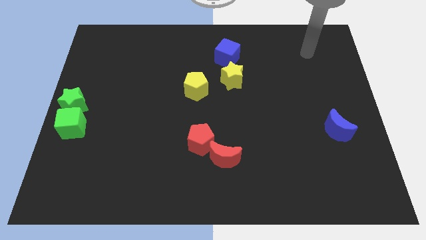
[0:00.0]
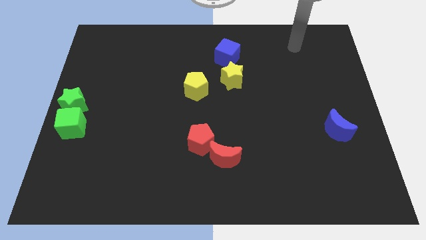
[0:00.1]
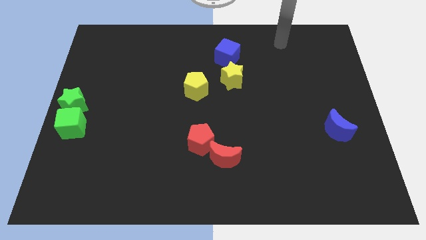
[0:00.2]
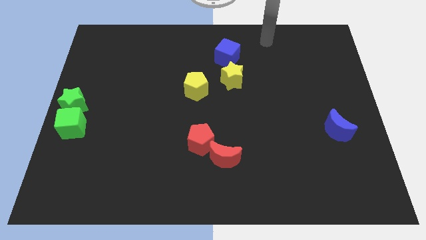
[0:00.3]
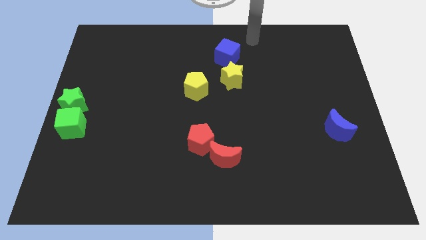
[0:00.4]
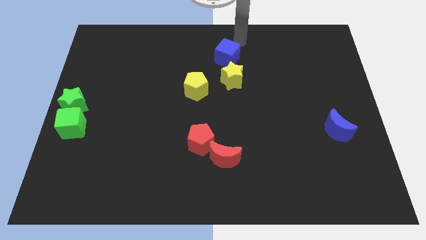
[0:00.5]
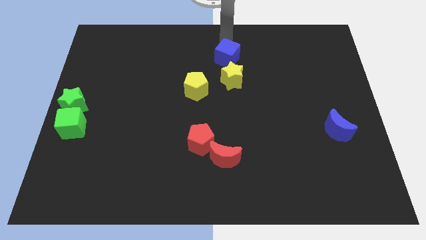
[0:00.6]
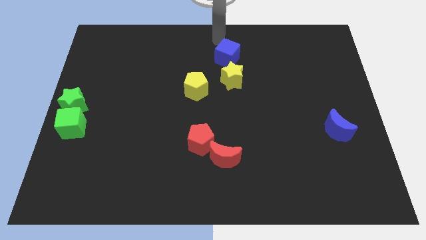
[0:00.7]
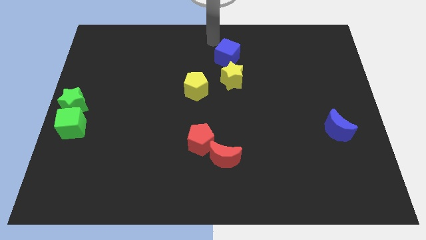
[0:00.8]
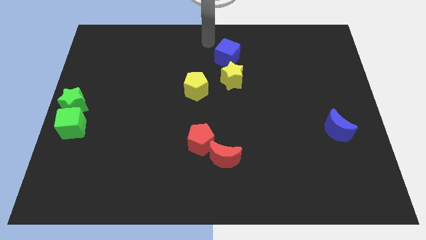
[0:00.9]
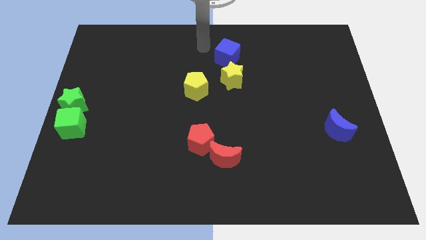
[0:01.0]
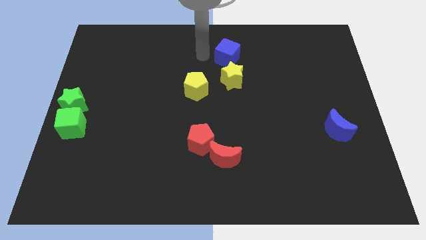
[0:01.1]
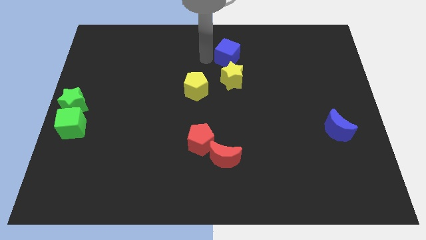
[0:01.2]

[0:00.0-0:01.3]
move your arm to the left of the blue cube

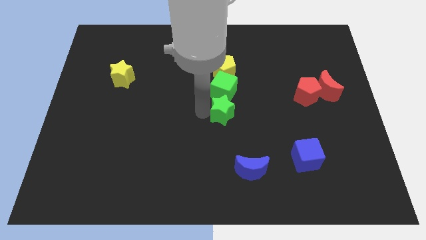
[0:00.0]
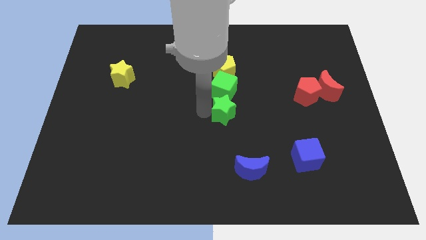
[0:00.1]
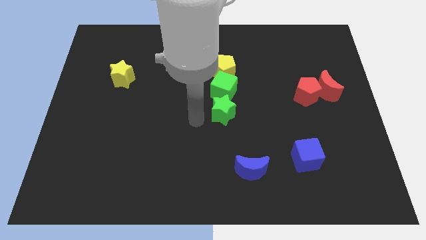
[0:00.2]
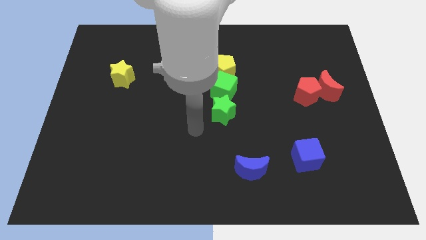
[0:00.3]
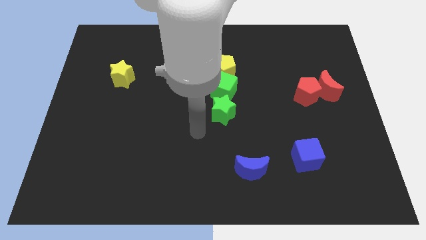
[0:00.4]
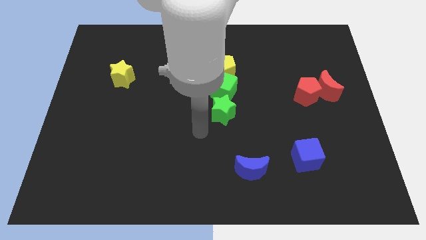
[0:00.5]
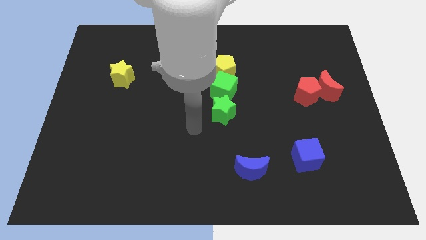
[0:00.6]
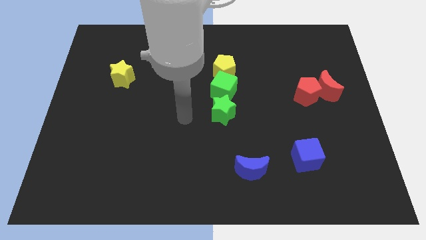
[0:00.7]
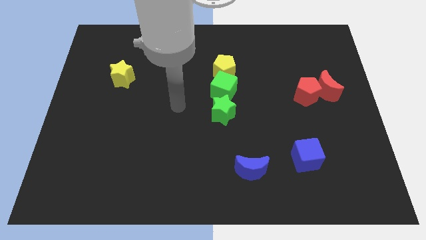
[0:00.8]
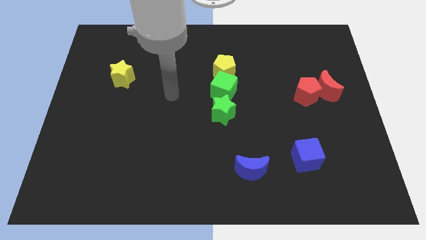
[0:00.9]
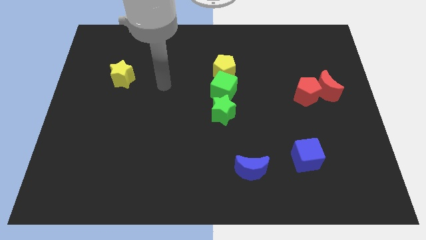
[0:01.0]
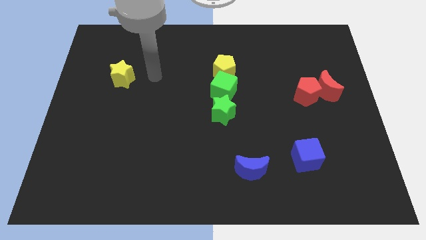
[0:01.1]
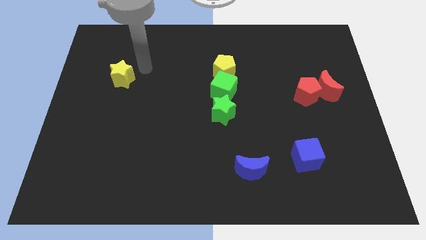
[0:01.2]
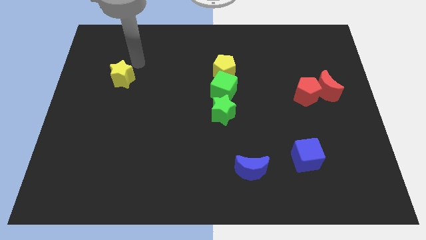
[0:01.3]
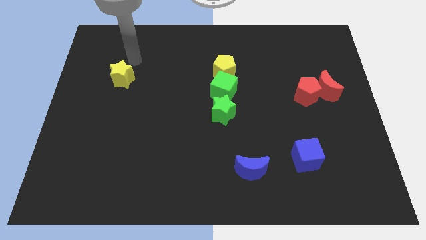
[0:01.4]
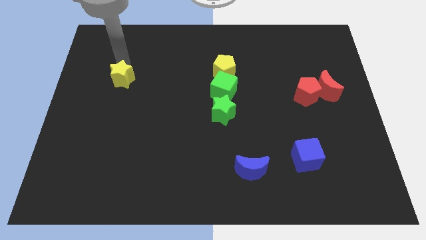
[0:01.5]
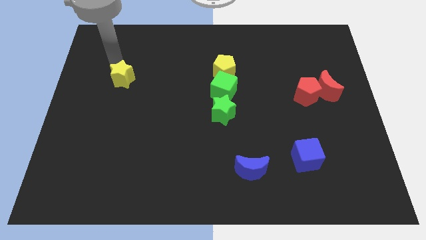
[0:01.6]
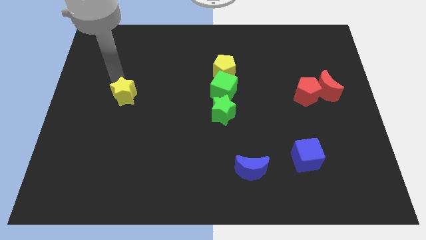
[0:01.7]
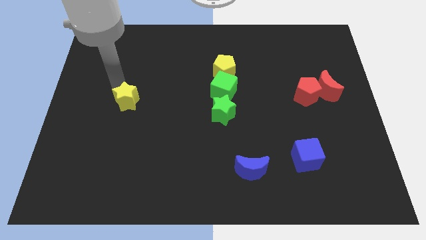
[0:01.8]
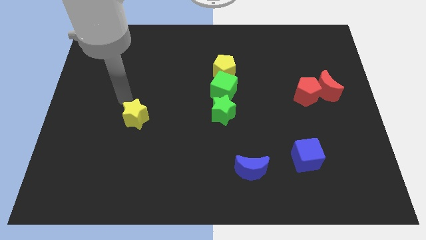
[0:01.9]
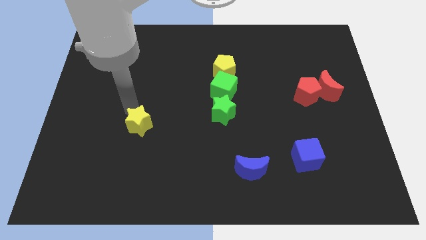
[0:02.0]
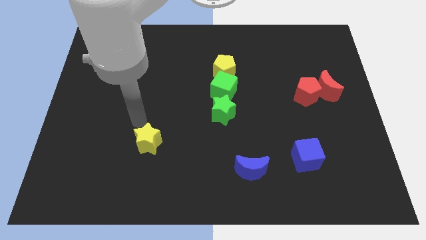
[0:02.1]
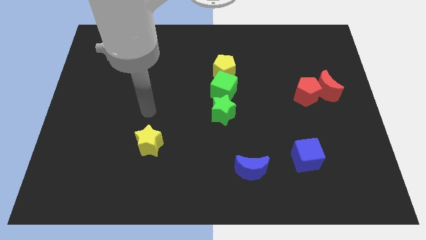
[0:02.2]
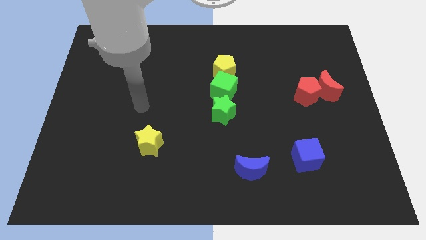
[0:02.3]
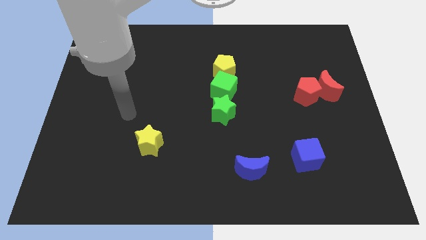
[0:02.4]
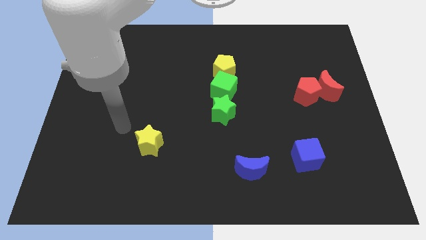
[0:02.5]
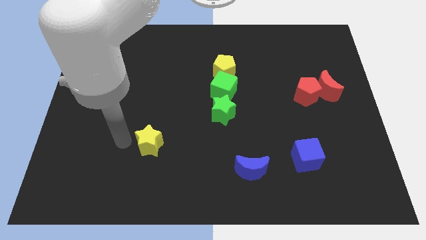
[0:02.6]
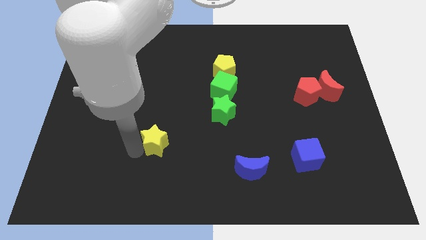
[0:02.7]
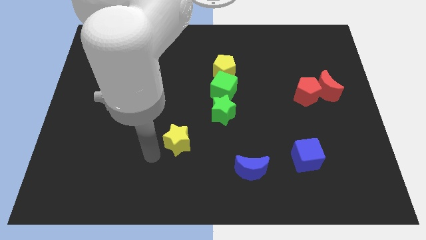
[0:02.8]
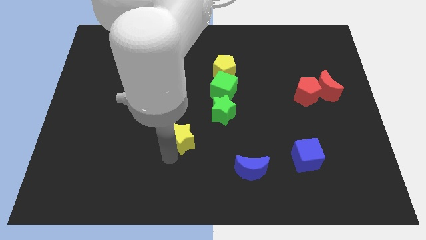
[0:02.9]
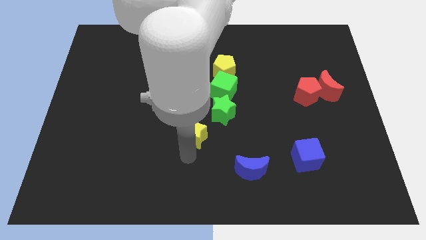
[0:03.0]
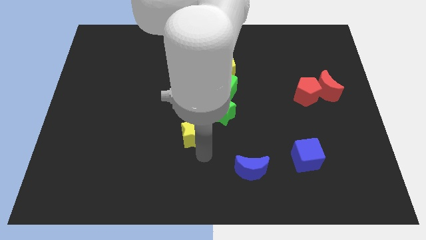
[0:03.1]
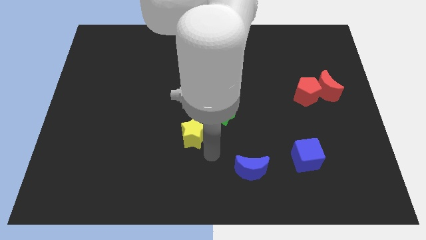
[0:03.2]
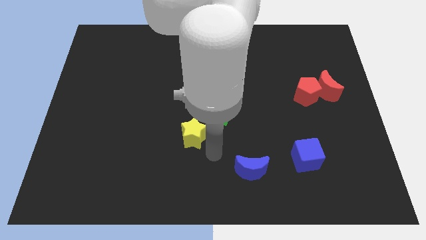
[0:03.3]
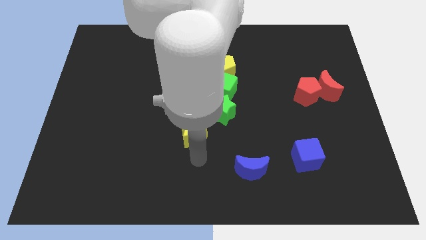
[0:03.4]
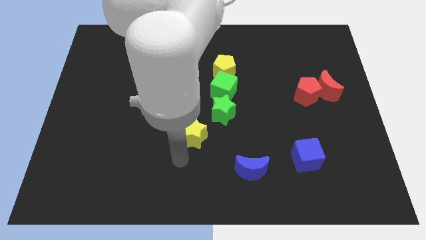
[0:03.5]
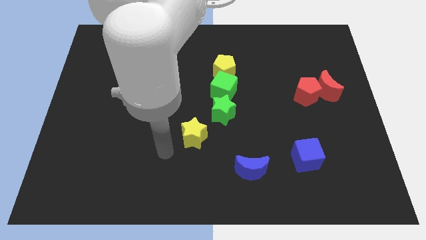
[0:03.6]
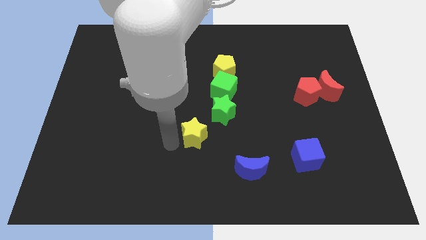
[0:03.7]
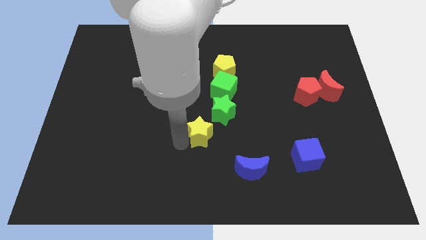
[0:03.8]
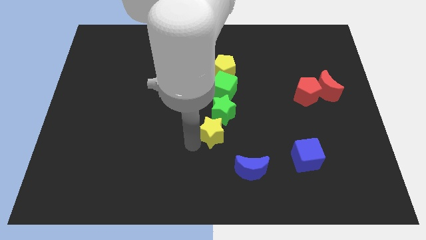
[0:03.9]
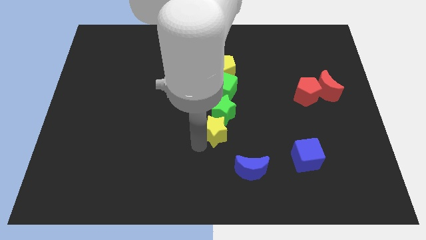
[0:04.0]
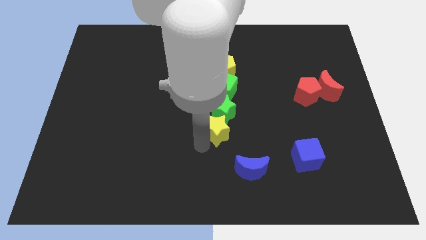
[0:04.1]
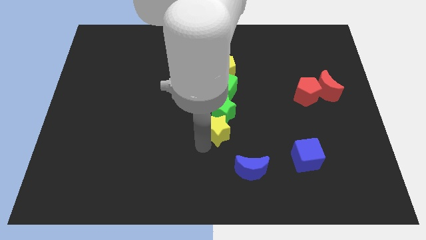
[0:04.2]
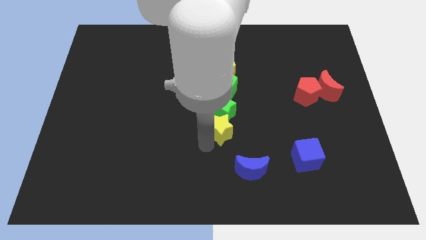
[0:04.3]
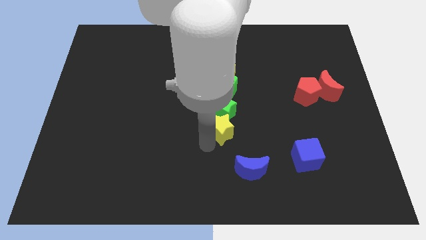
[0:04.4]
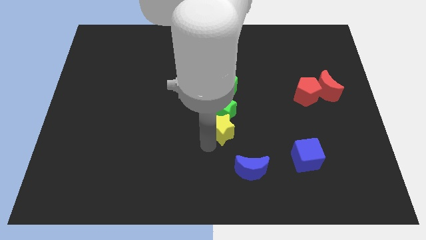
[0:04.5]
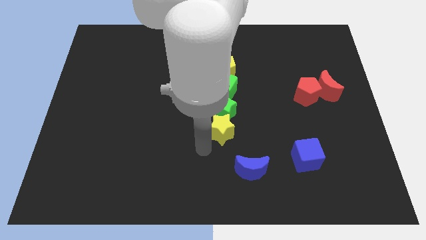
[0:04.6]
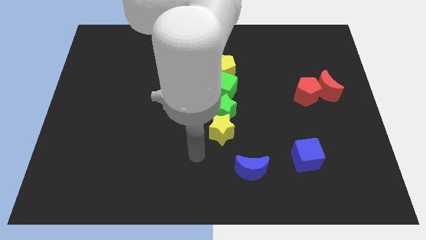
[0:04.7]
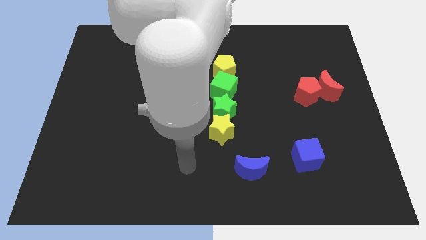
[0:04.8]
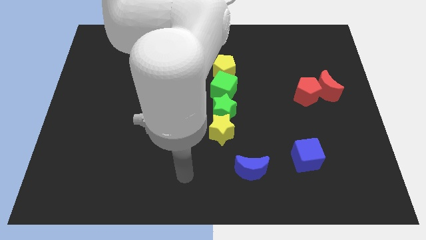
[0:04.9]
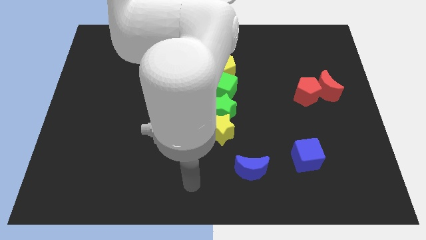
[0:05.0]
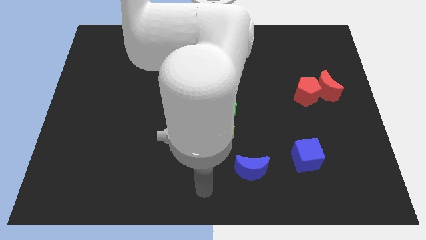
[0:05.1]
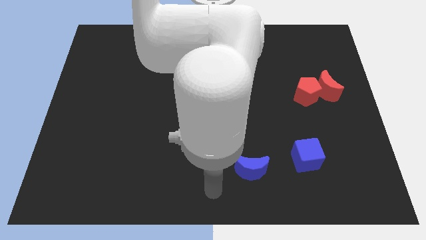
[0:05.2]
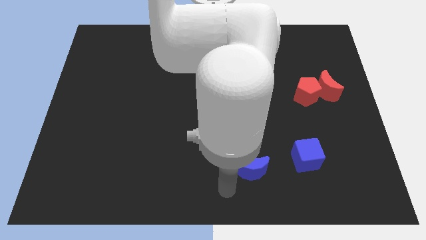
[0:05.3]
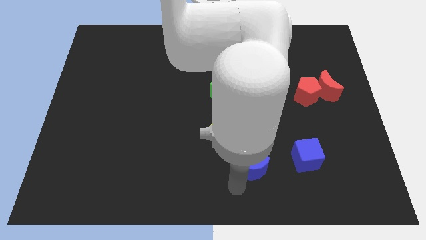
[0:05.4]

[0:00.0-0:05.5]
push the yellow star vertically below the green star to form a vertical line

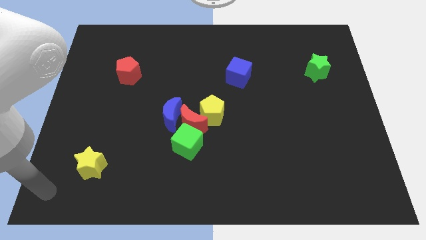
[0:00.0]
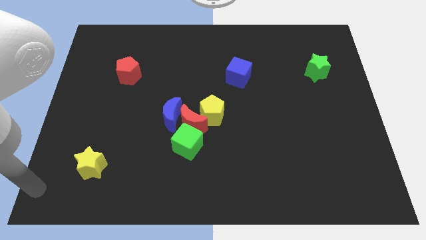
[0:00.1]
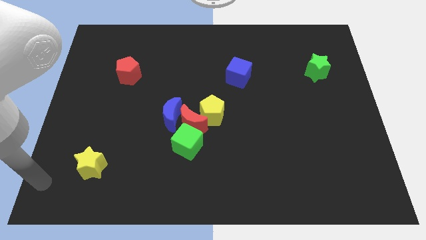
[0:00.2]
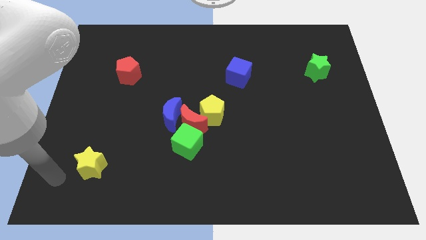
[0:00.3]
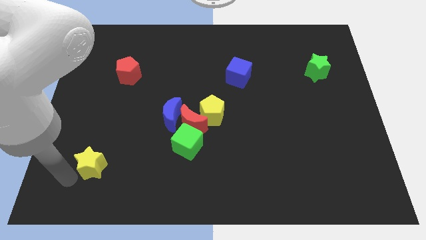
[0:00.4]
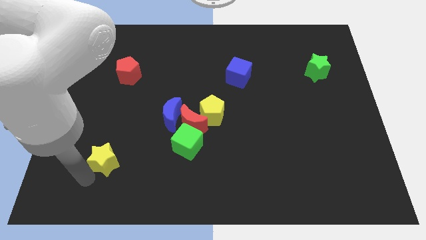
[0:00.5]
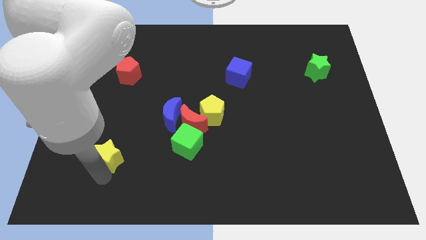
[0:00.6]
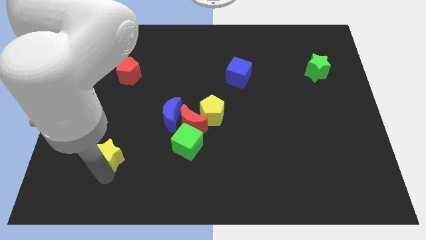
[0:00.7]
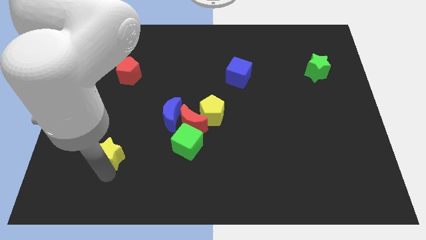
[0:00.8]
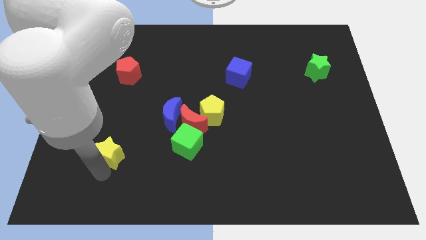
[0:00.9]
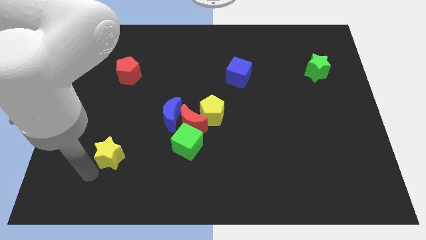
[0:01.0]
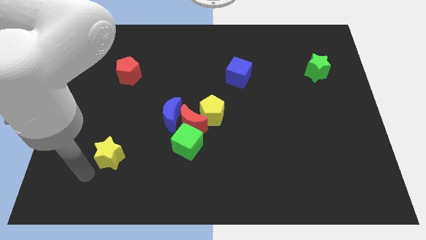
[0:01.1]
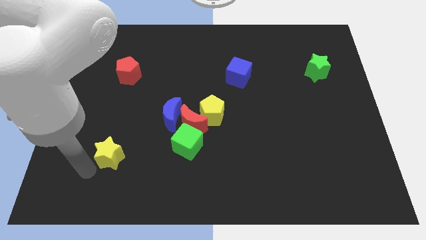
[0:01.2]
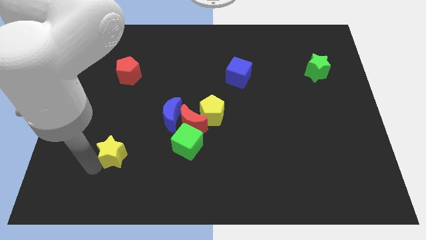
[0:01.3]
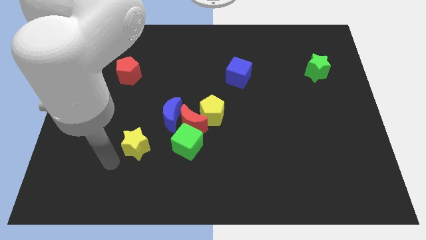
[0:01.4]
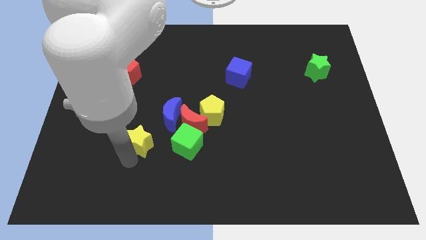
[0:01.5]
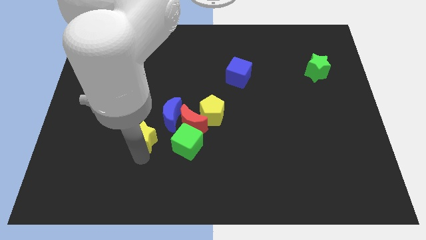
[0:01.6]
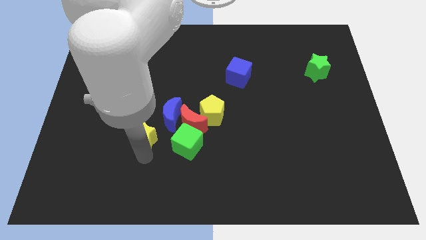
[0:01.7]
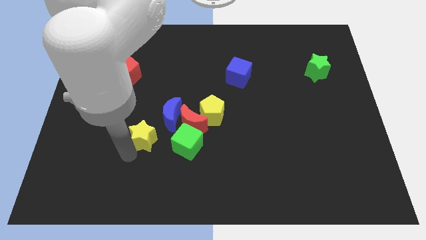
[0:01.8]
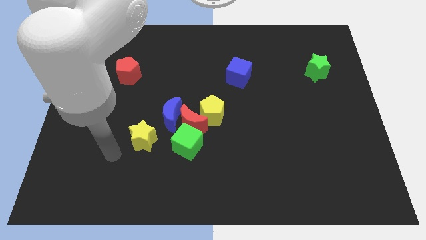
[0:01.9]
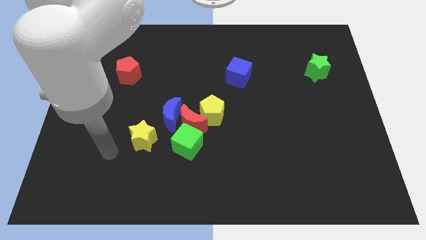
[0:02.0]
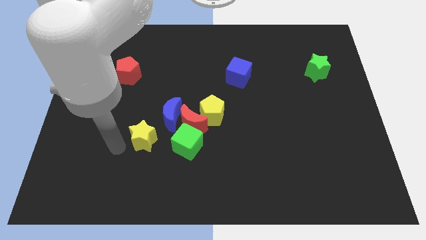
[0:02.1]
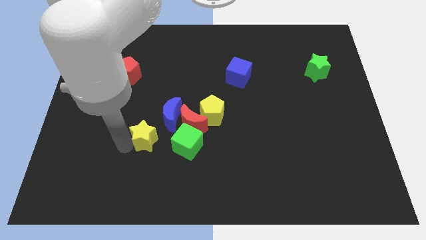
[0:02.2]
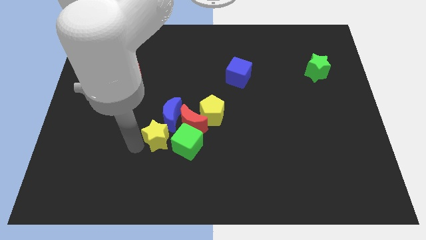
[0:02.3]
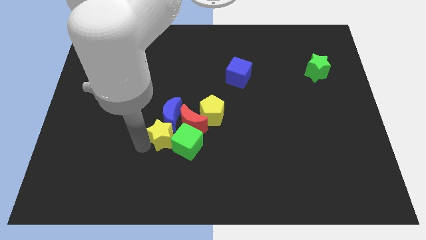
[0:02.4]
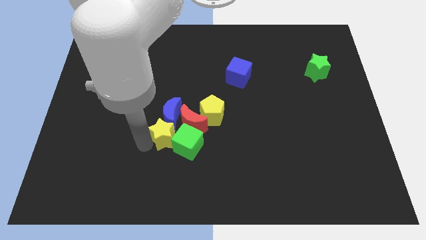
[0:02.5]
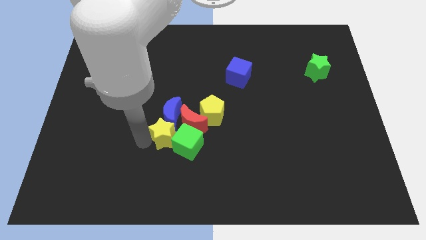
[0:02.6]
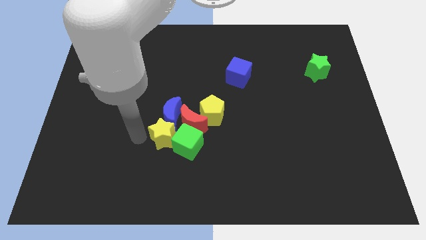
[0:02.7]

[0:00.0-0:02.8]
push the yellow star into the green cube
